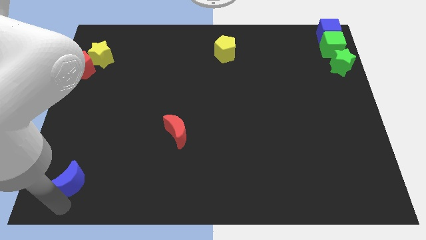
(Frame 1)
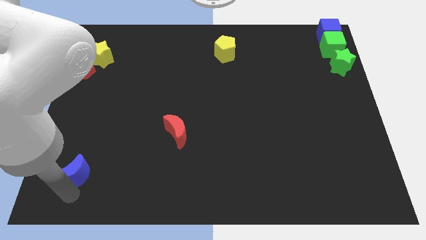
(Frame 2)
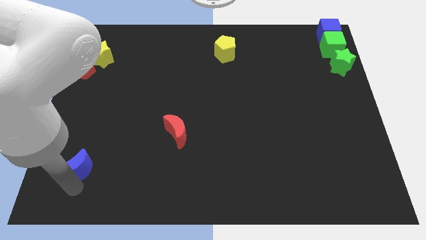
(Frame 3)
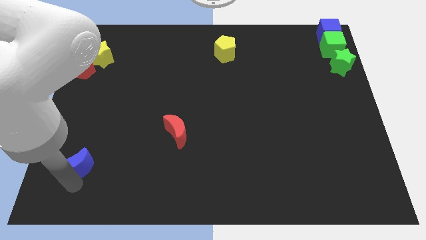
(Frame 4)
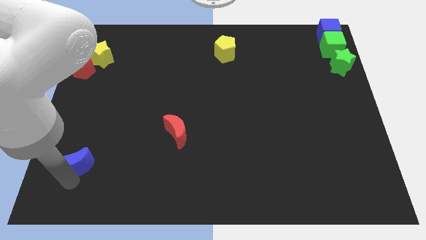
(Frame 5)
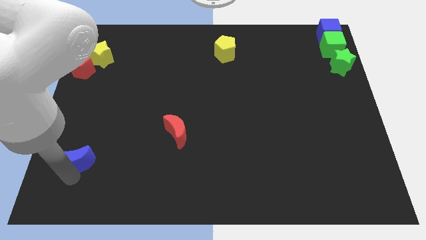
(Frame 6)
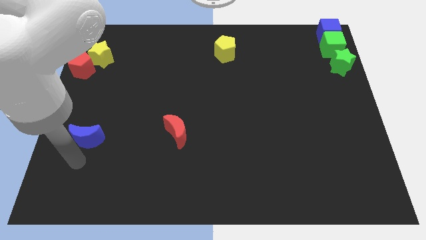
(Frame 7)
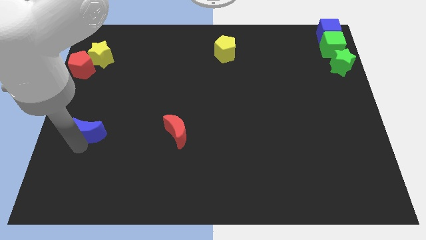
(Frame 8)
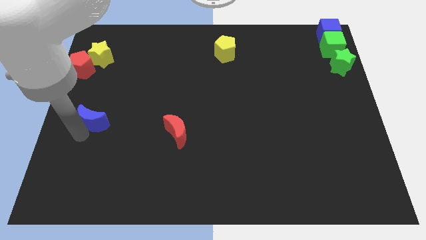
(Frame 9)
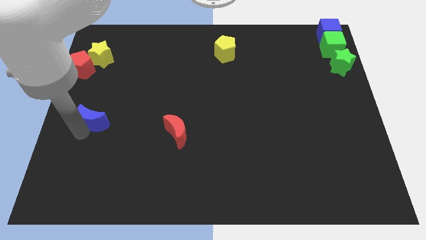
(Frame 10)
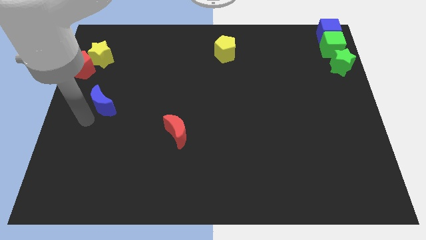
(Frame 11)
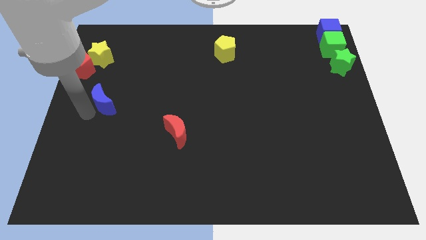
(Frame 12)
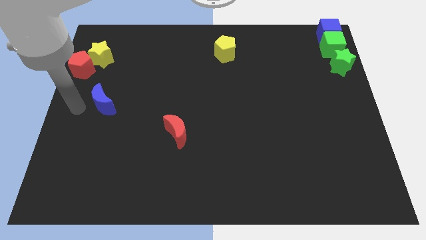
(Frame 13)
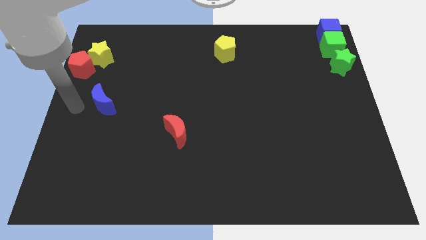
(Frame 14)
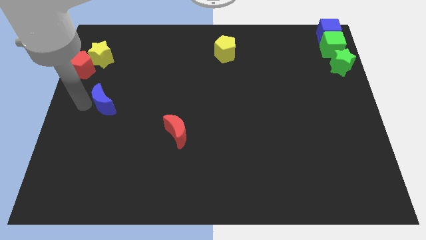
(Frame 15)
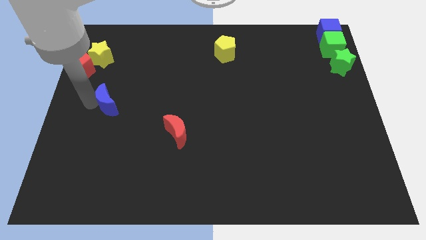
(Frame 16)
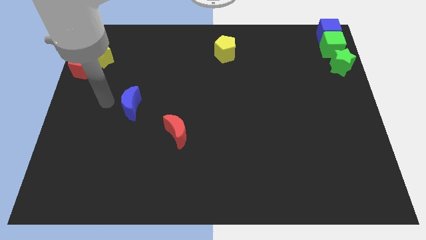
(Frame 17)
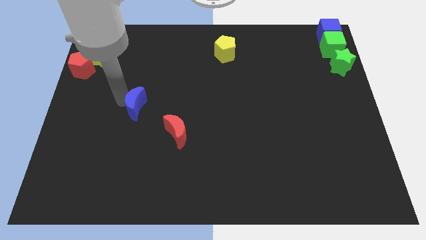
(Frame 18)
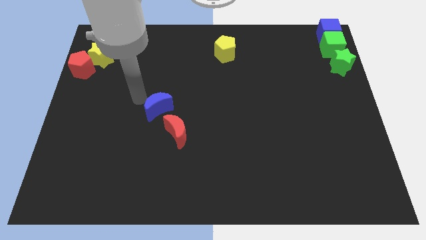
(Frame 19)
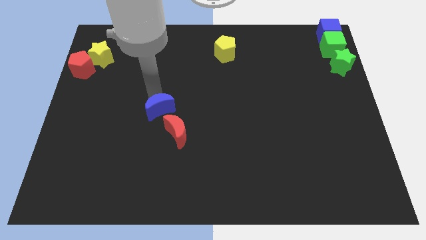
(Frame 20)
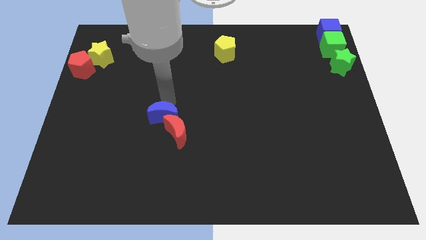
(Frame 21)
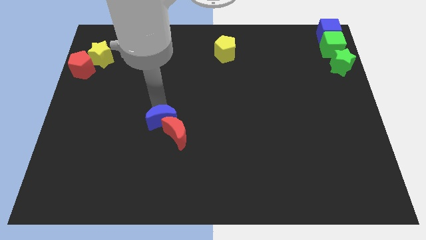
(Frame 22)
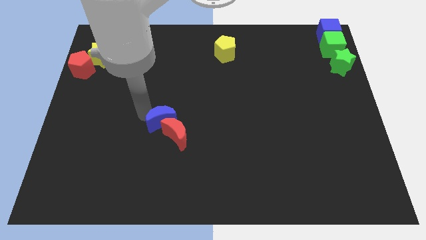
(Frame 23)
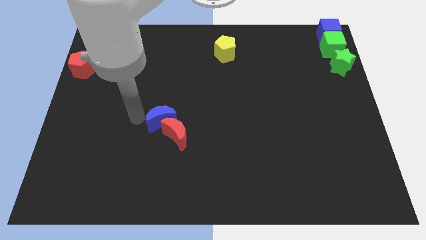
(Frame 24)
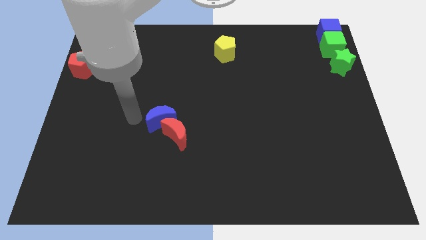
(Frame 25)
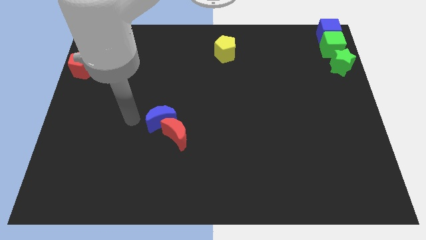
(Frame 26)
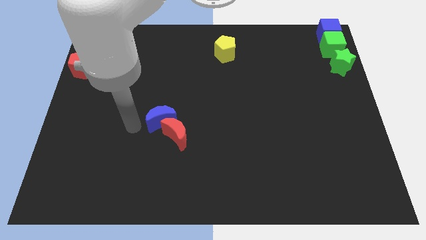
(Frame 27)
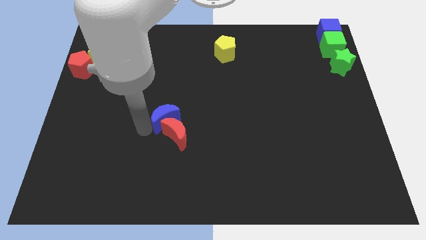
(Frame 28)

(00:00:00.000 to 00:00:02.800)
move the blue moon into red moon

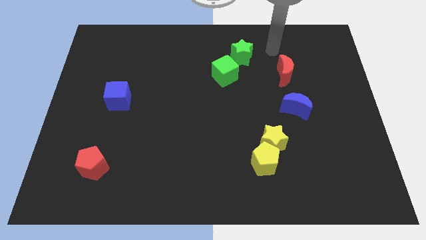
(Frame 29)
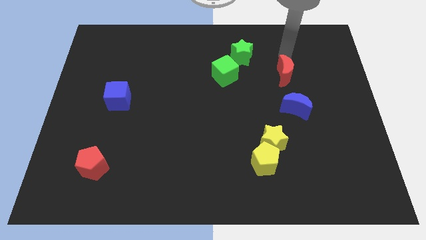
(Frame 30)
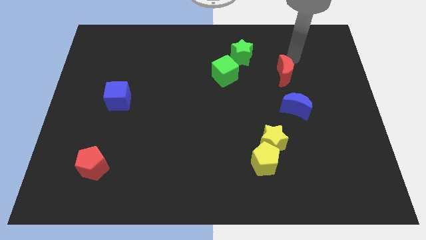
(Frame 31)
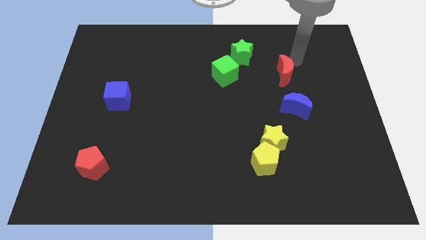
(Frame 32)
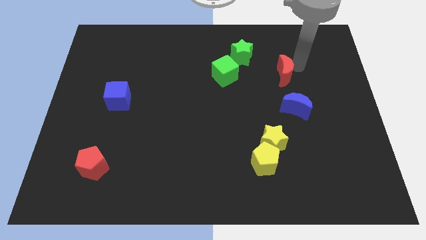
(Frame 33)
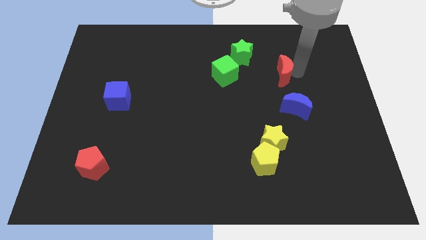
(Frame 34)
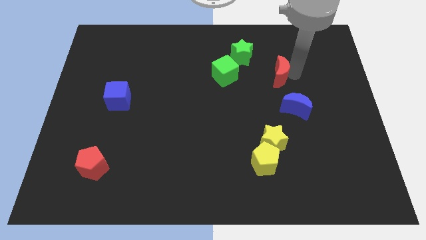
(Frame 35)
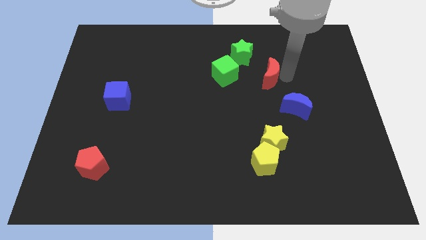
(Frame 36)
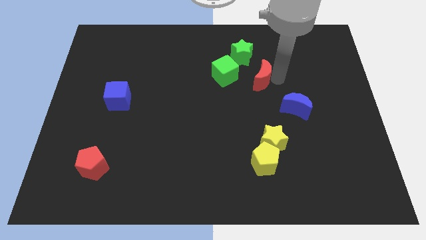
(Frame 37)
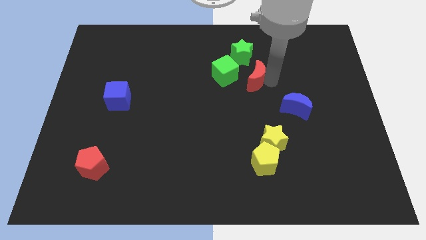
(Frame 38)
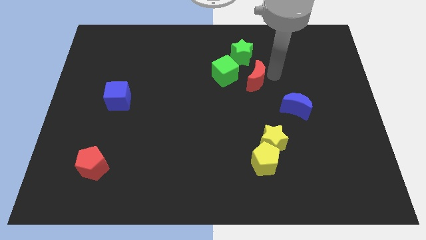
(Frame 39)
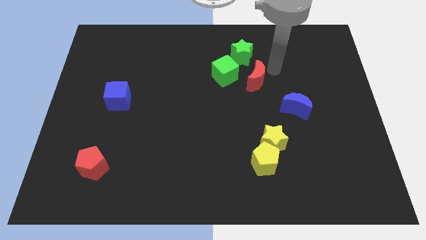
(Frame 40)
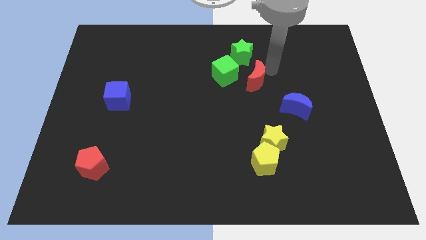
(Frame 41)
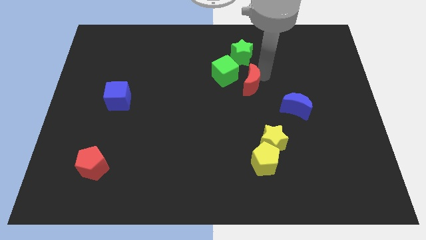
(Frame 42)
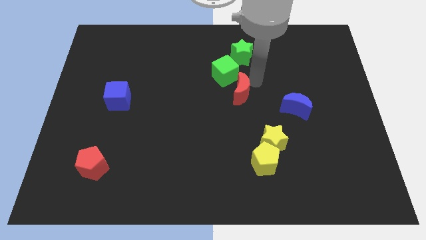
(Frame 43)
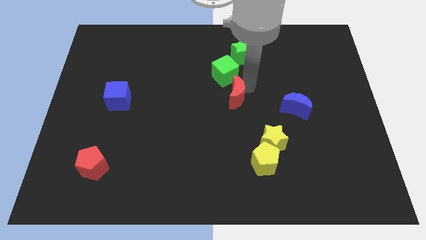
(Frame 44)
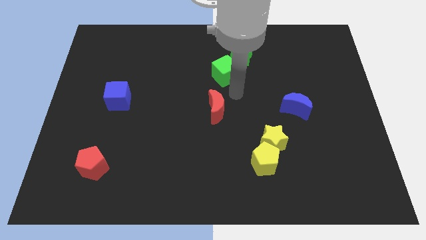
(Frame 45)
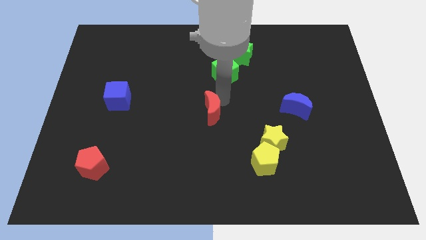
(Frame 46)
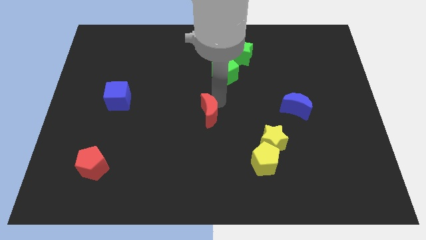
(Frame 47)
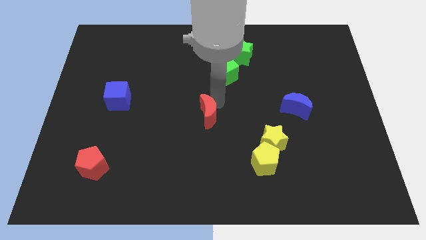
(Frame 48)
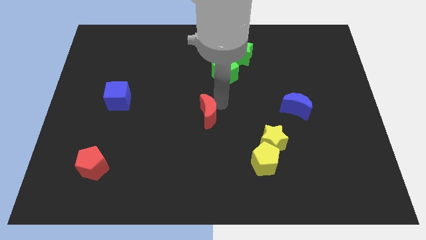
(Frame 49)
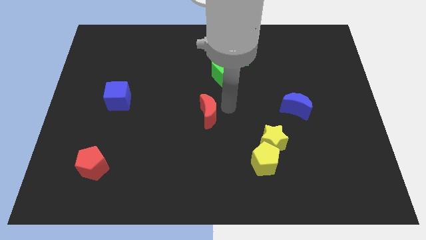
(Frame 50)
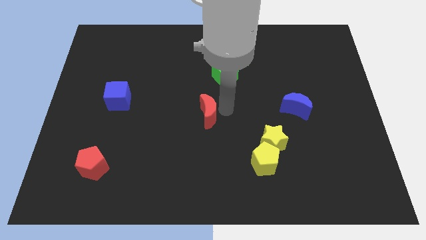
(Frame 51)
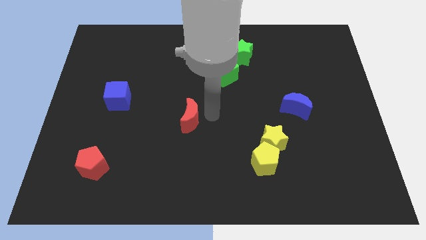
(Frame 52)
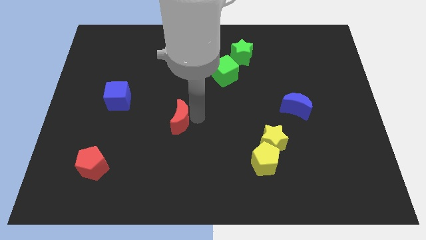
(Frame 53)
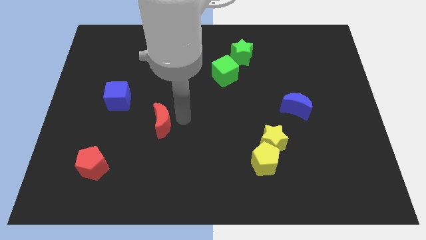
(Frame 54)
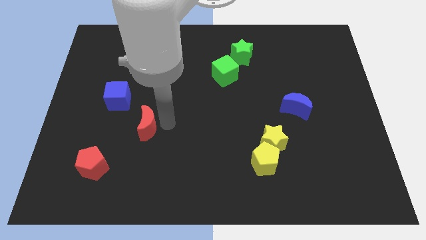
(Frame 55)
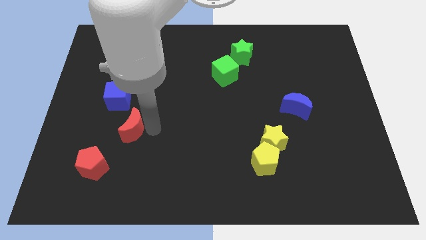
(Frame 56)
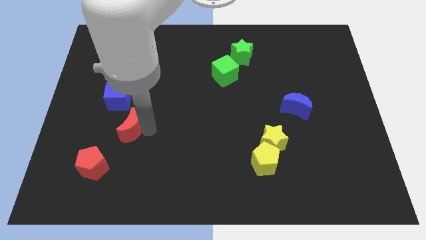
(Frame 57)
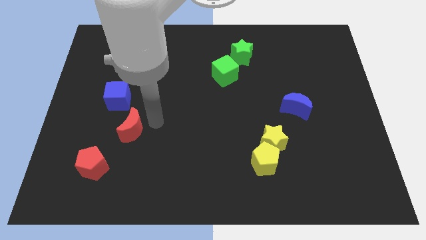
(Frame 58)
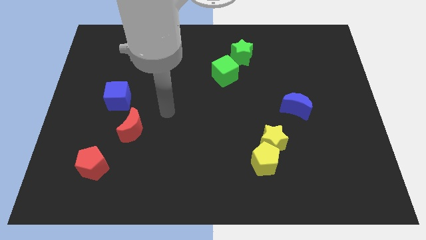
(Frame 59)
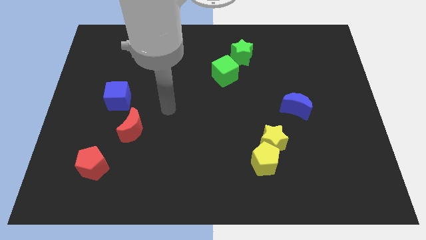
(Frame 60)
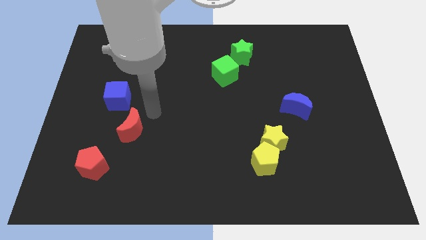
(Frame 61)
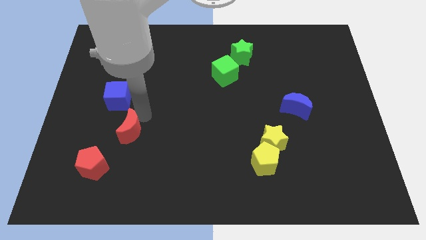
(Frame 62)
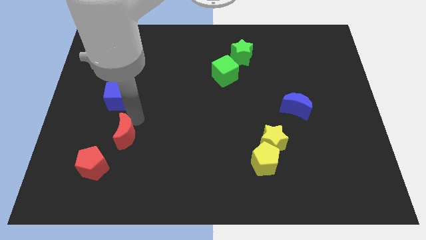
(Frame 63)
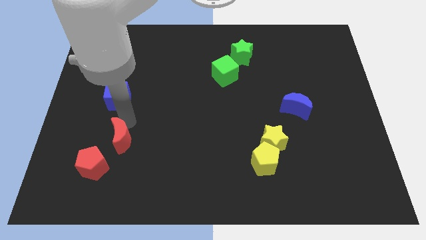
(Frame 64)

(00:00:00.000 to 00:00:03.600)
push red moon towards red pentagon

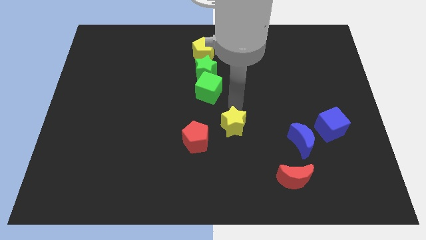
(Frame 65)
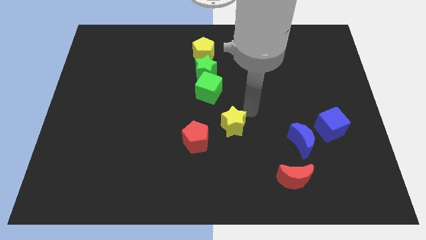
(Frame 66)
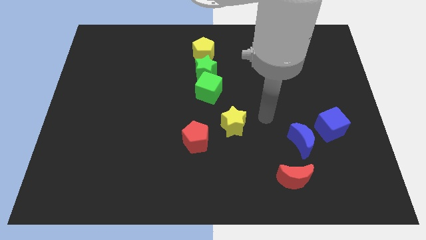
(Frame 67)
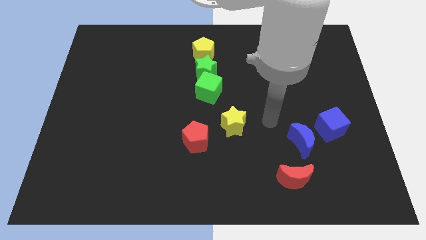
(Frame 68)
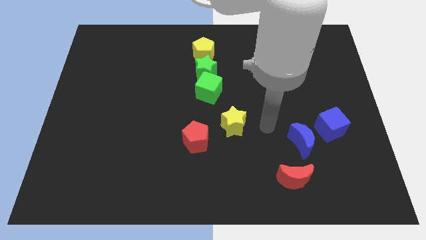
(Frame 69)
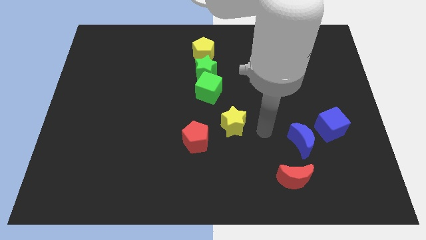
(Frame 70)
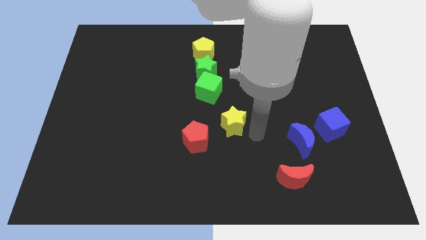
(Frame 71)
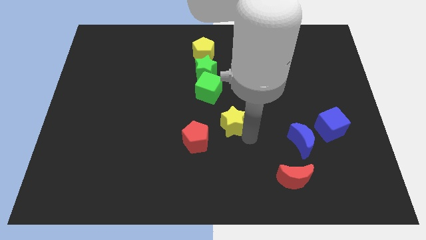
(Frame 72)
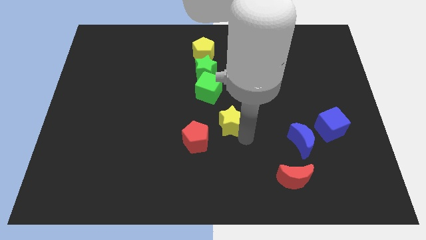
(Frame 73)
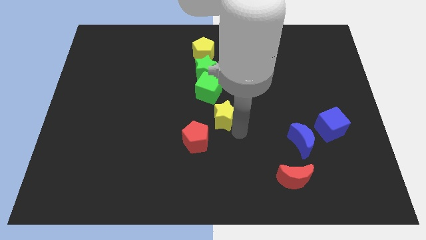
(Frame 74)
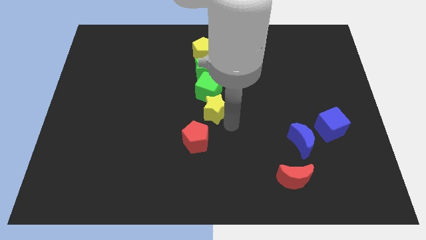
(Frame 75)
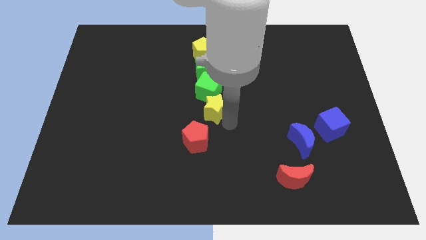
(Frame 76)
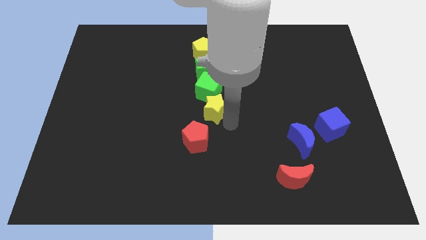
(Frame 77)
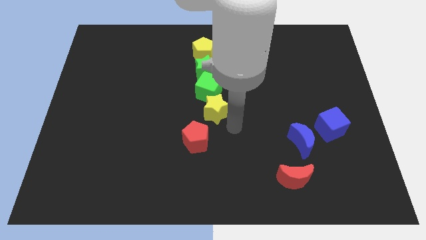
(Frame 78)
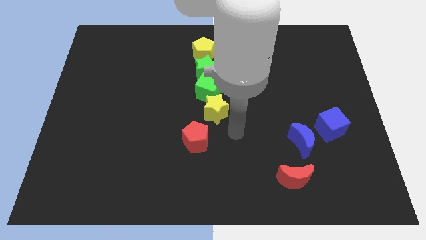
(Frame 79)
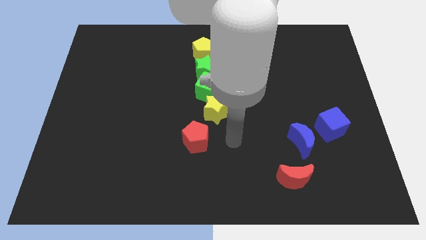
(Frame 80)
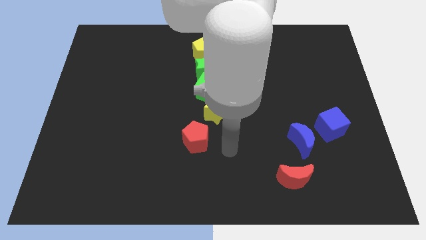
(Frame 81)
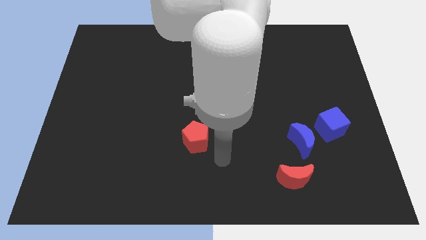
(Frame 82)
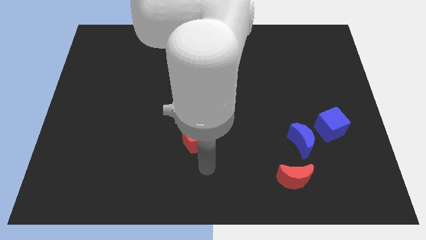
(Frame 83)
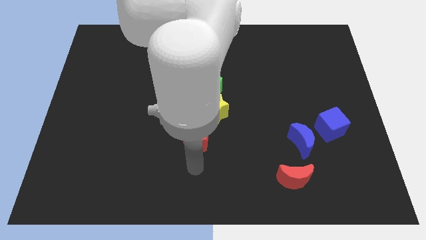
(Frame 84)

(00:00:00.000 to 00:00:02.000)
push the yellow star below green cube

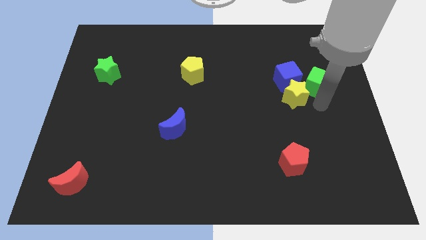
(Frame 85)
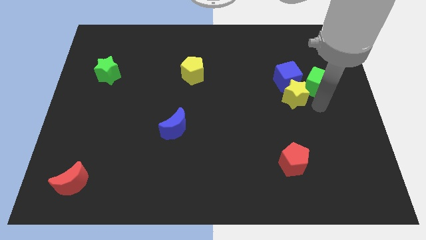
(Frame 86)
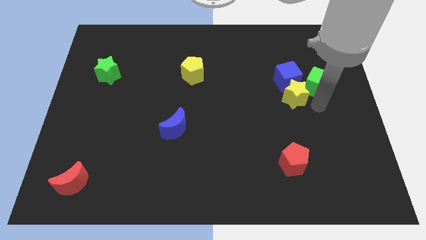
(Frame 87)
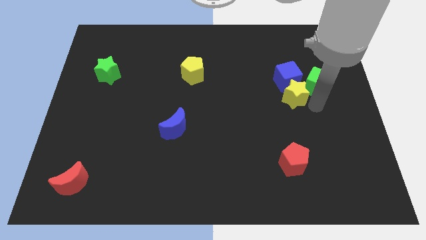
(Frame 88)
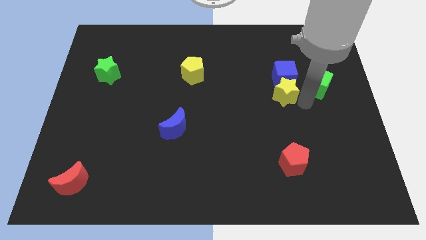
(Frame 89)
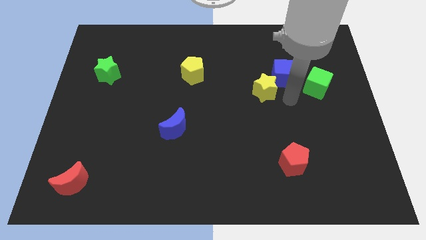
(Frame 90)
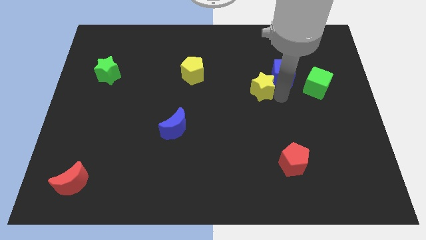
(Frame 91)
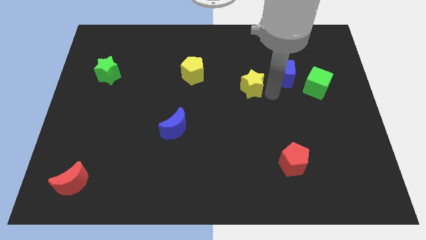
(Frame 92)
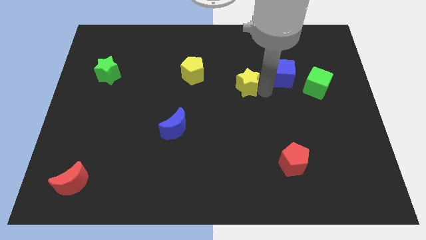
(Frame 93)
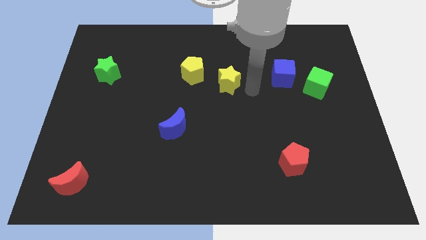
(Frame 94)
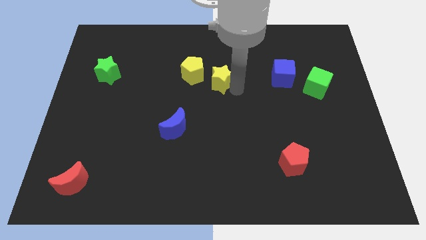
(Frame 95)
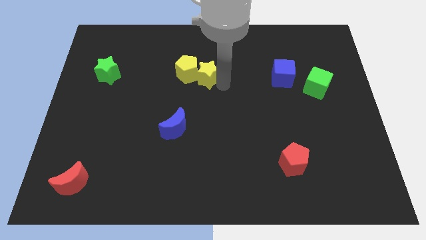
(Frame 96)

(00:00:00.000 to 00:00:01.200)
place the yellow star into the yellow pentagon
